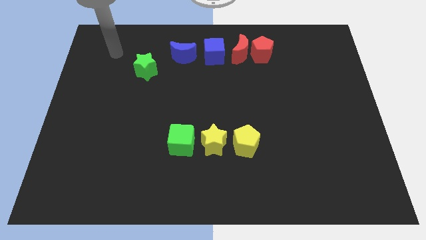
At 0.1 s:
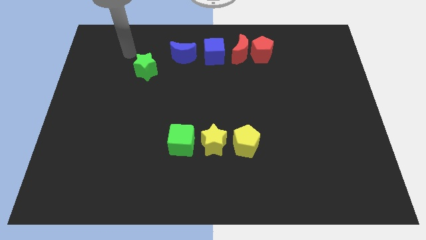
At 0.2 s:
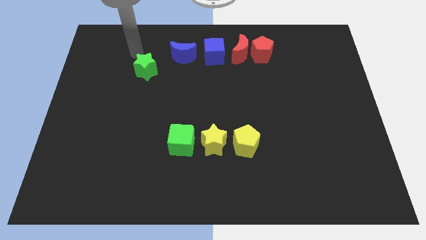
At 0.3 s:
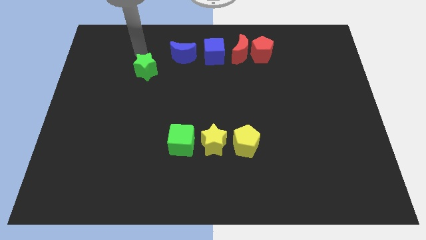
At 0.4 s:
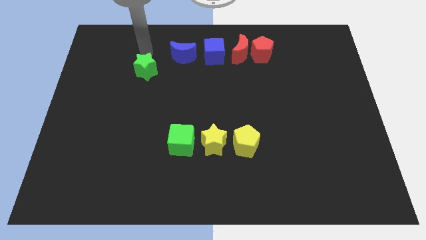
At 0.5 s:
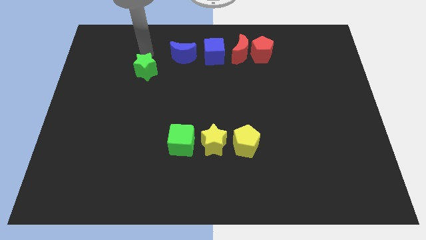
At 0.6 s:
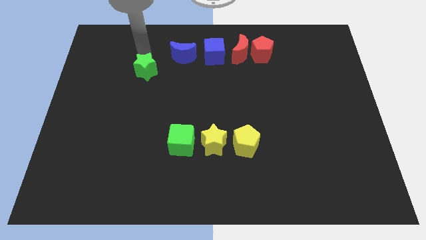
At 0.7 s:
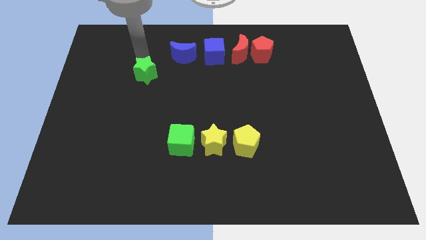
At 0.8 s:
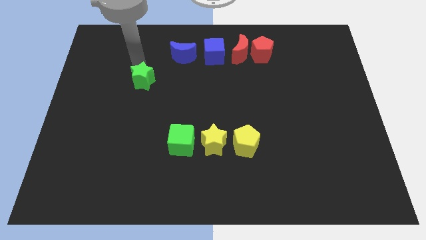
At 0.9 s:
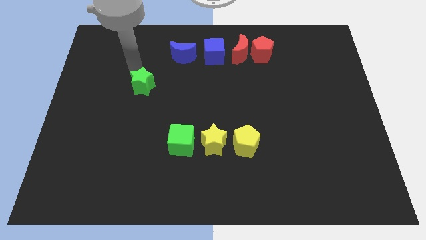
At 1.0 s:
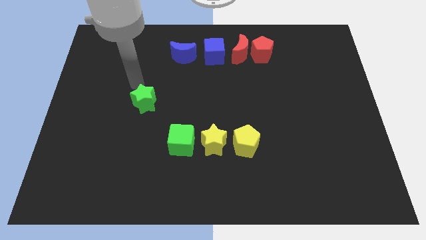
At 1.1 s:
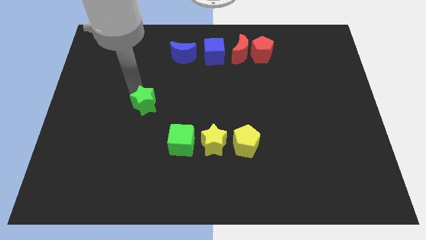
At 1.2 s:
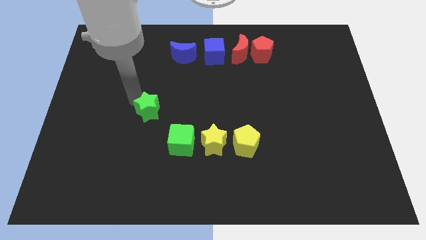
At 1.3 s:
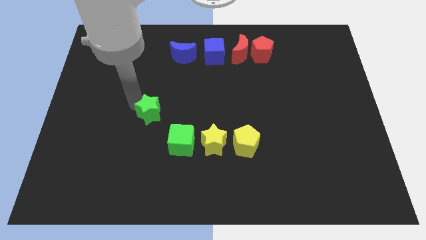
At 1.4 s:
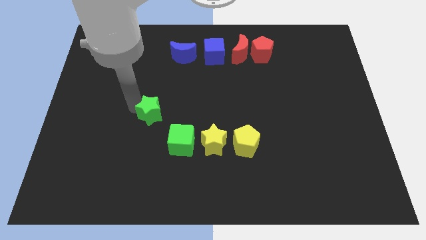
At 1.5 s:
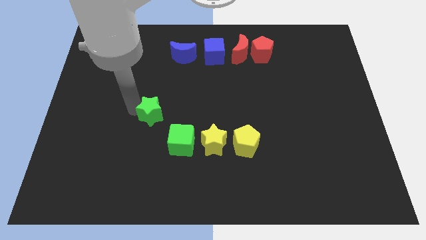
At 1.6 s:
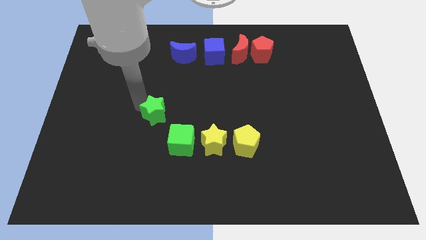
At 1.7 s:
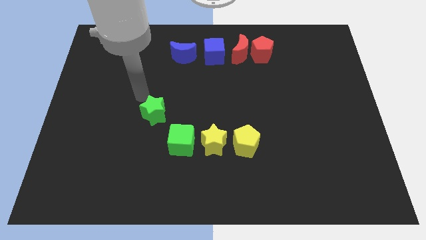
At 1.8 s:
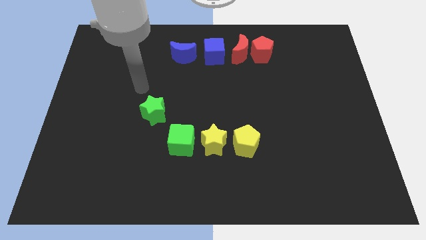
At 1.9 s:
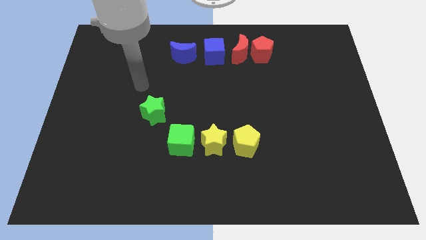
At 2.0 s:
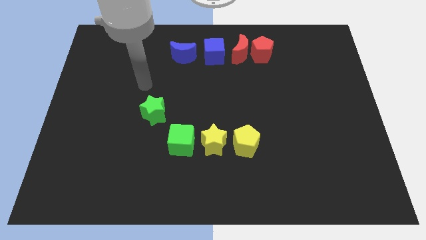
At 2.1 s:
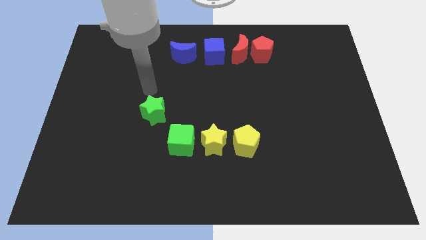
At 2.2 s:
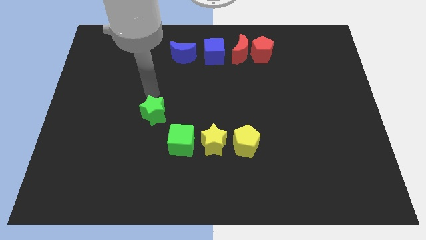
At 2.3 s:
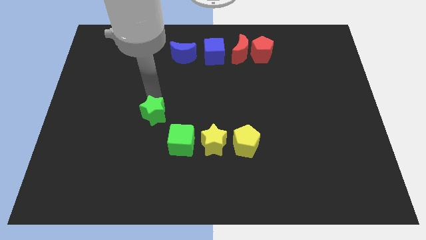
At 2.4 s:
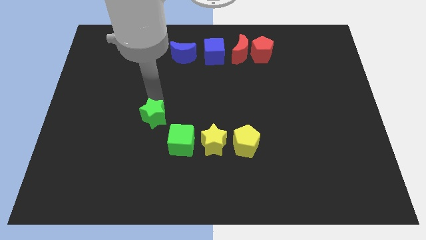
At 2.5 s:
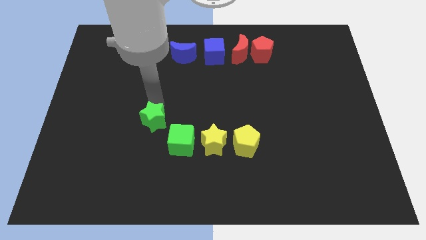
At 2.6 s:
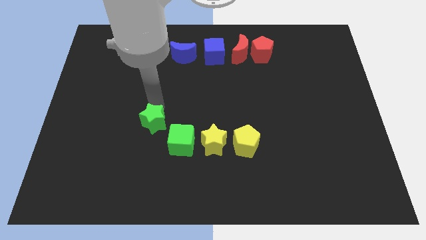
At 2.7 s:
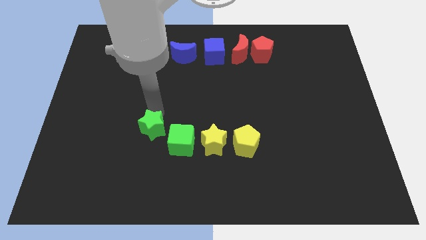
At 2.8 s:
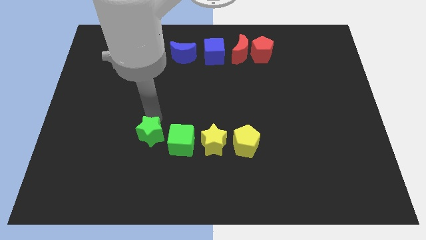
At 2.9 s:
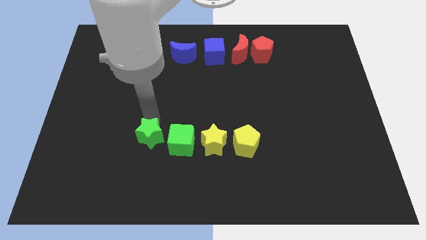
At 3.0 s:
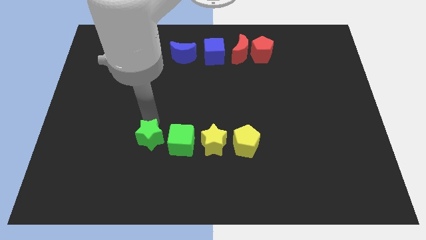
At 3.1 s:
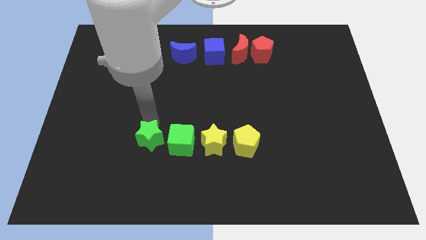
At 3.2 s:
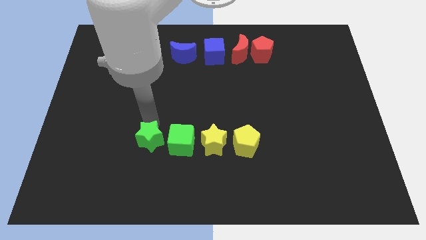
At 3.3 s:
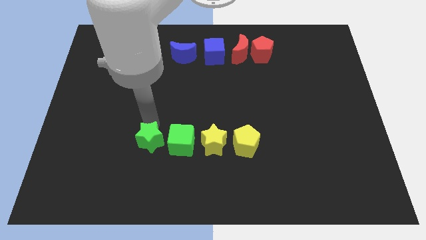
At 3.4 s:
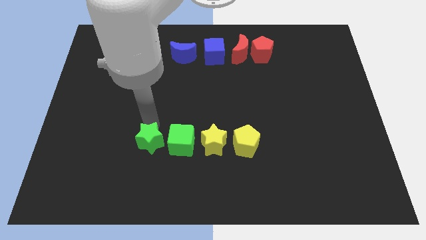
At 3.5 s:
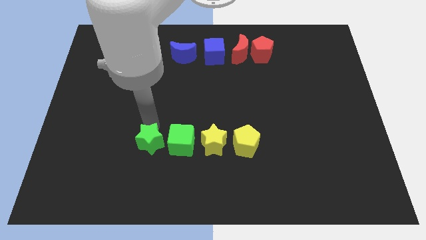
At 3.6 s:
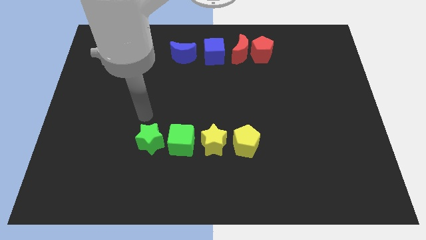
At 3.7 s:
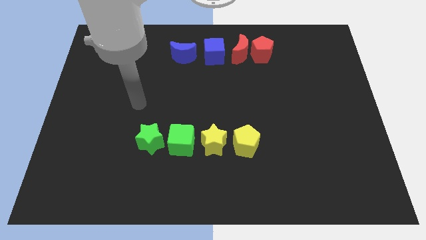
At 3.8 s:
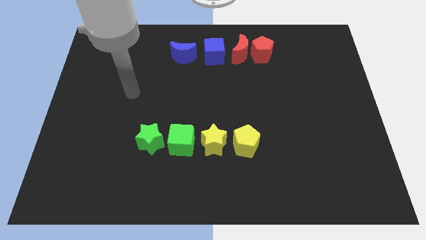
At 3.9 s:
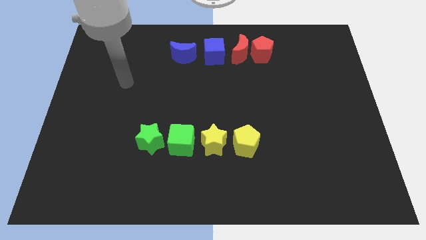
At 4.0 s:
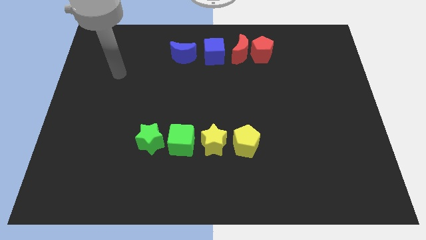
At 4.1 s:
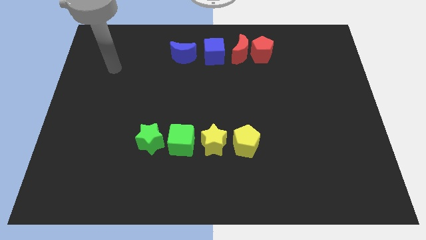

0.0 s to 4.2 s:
move the green star to form a horizontal line with three blocks

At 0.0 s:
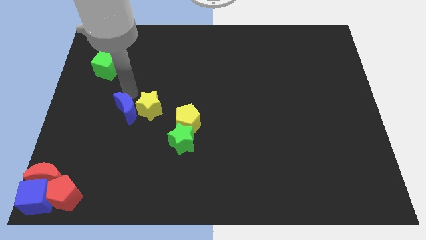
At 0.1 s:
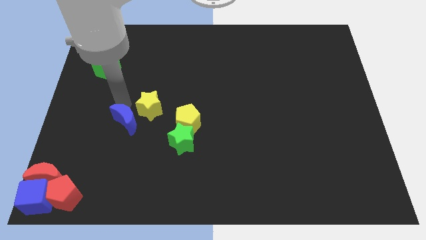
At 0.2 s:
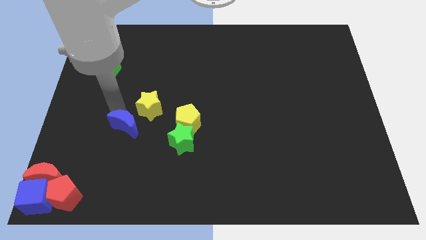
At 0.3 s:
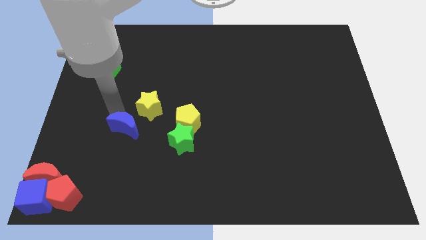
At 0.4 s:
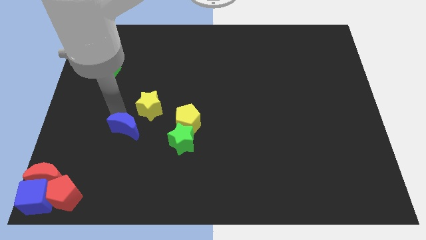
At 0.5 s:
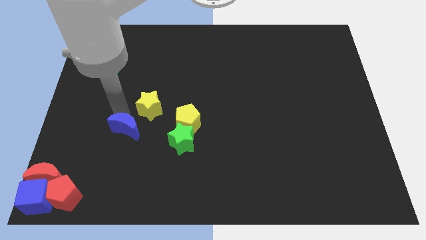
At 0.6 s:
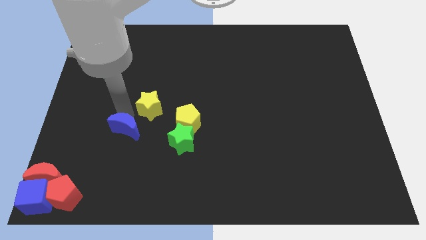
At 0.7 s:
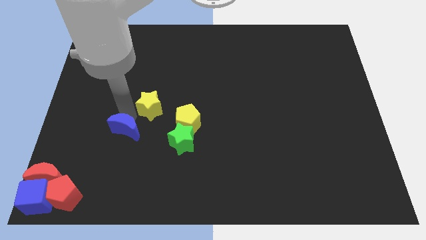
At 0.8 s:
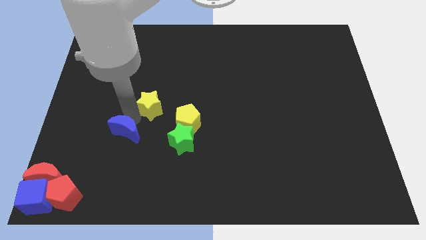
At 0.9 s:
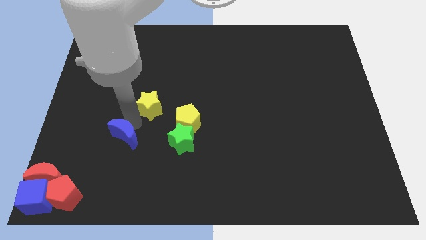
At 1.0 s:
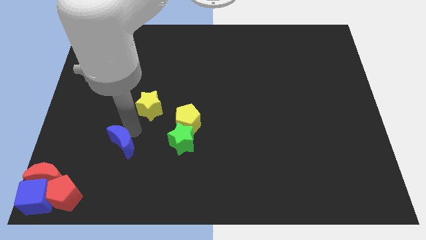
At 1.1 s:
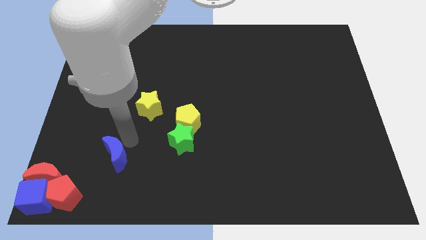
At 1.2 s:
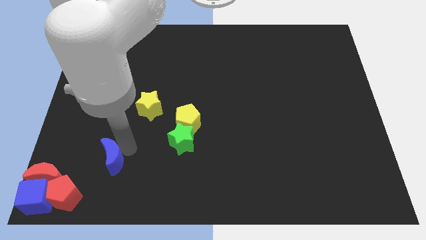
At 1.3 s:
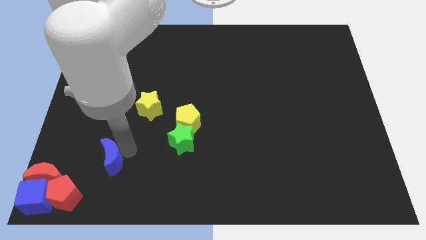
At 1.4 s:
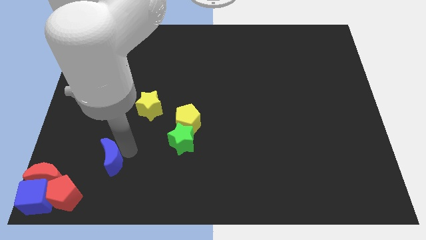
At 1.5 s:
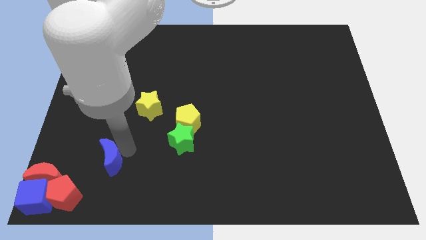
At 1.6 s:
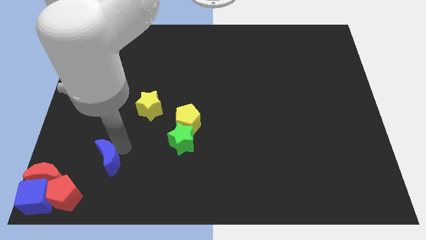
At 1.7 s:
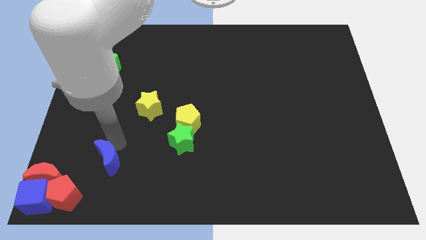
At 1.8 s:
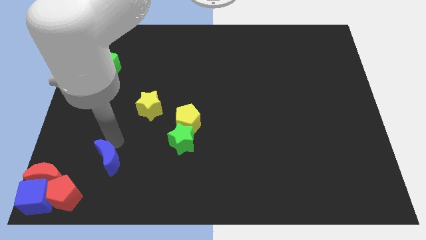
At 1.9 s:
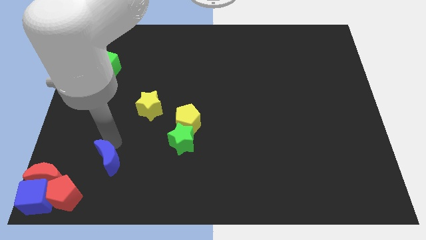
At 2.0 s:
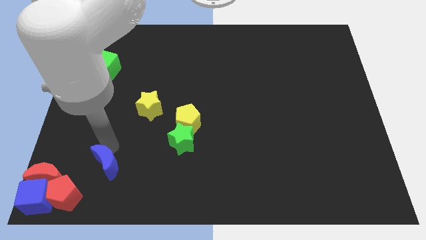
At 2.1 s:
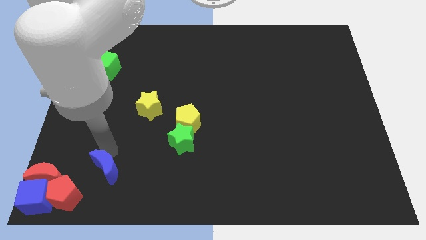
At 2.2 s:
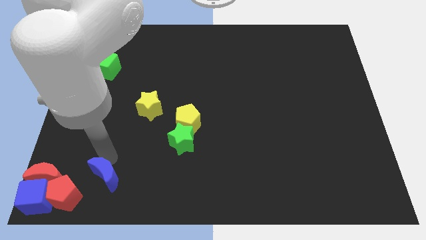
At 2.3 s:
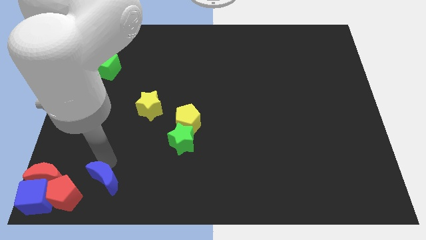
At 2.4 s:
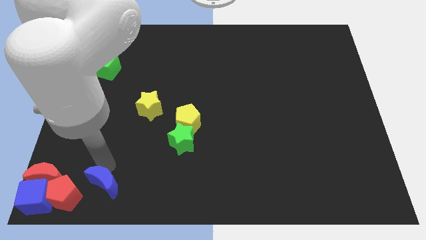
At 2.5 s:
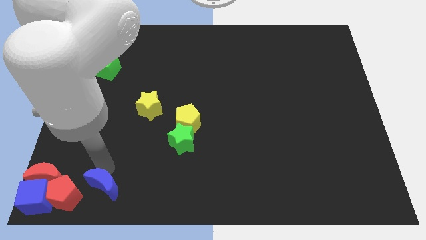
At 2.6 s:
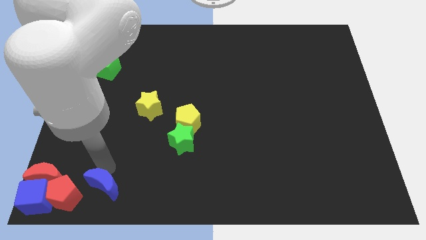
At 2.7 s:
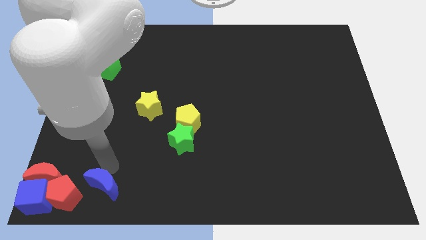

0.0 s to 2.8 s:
move blue moon towards red pentagon

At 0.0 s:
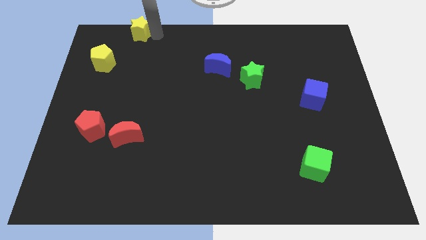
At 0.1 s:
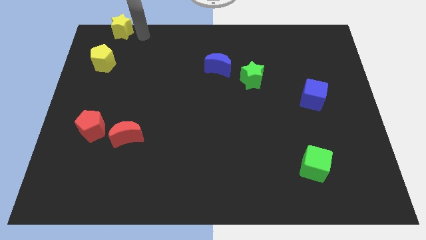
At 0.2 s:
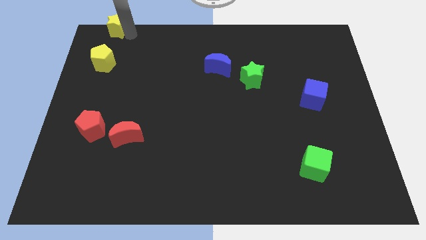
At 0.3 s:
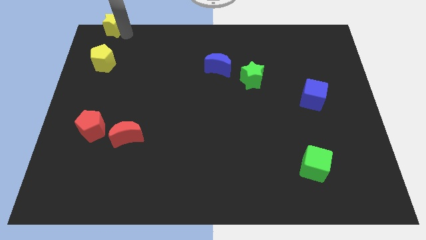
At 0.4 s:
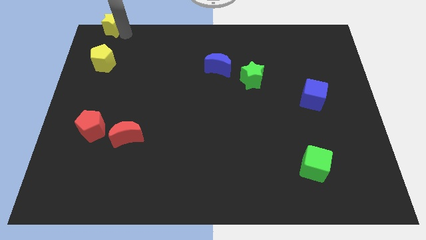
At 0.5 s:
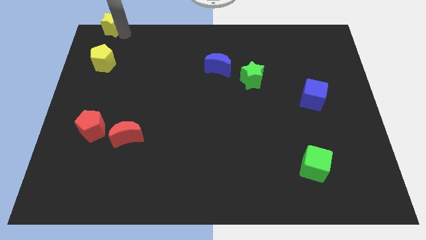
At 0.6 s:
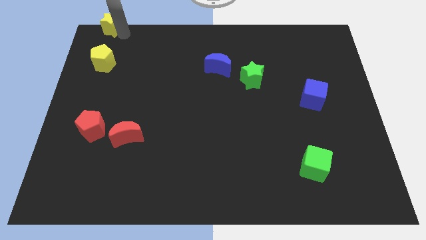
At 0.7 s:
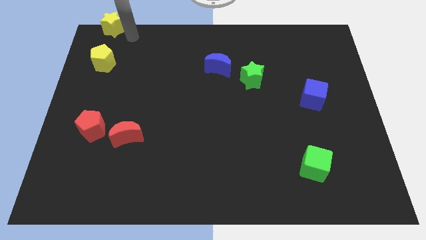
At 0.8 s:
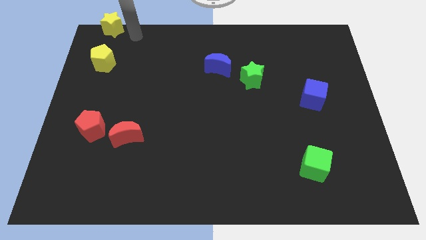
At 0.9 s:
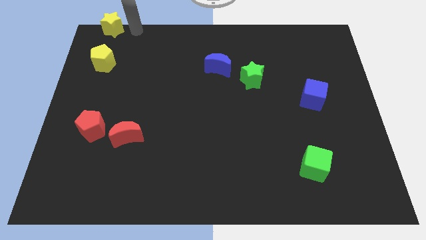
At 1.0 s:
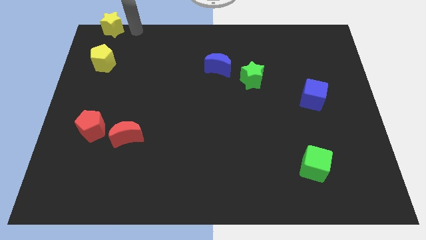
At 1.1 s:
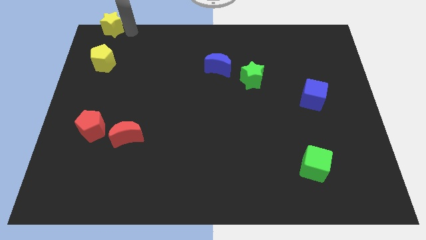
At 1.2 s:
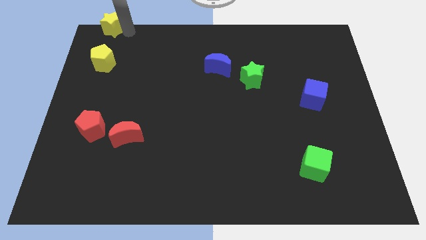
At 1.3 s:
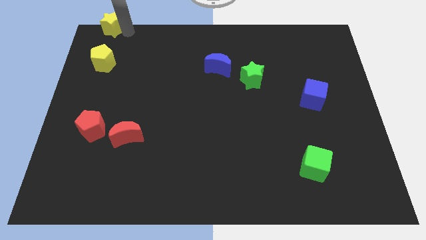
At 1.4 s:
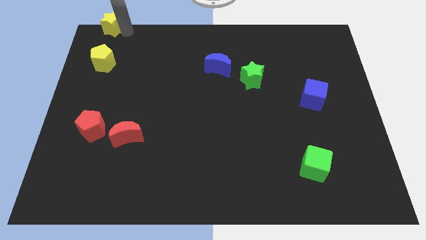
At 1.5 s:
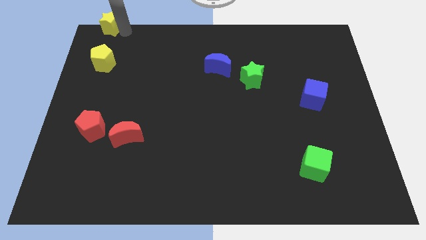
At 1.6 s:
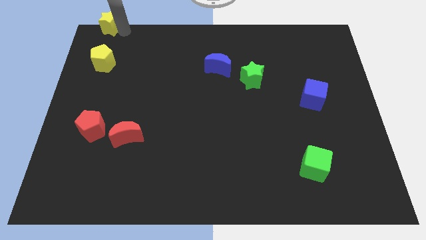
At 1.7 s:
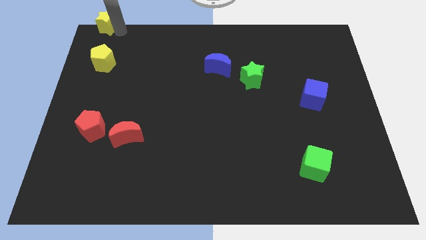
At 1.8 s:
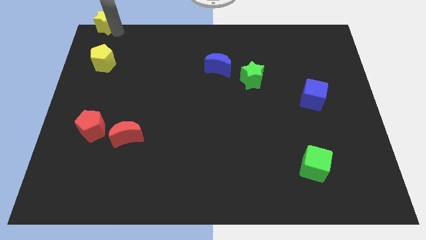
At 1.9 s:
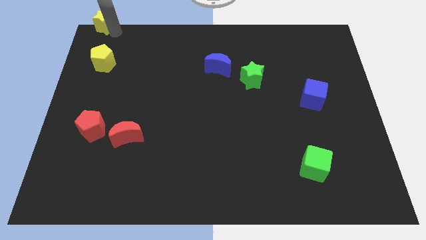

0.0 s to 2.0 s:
move the yellow star to the top side of the yellow pentagon

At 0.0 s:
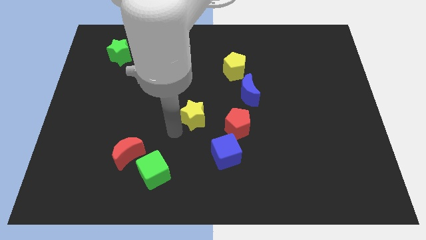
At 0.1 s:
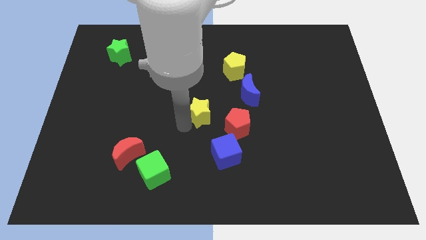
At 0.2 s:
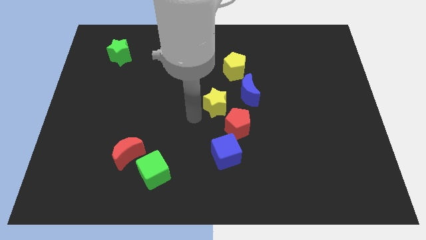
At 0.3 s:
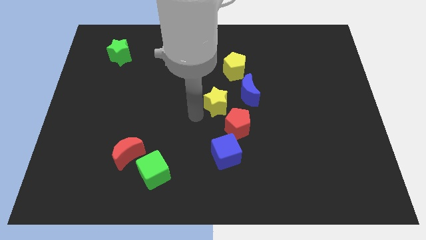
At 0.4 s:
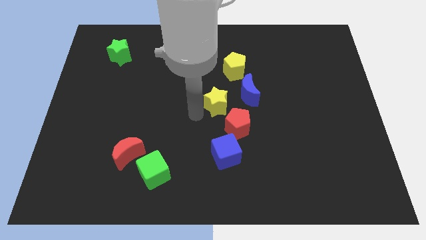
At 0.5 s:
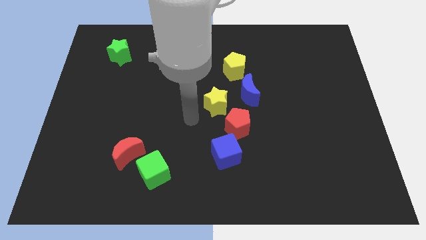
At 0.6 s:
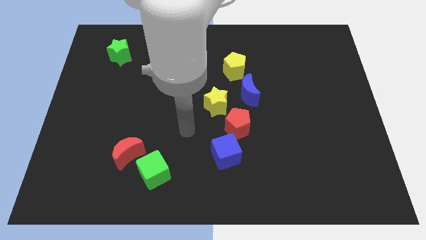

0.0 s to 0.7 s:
push the yellow star towards the yellow pentagon
